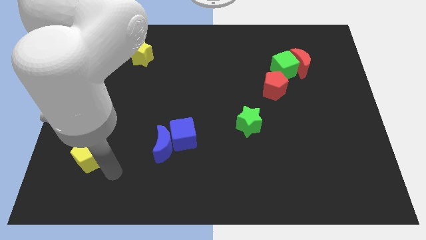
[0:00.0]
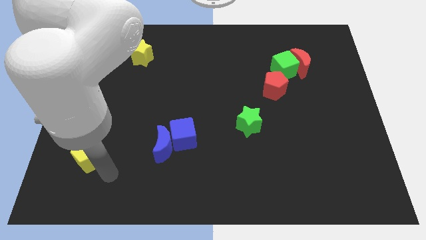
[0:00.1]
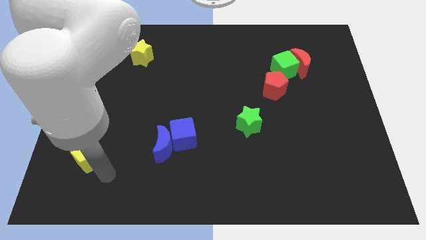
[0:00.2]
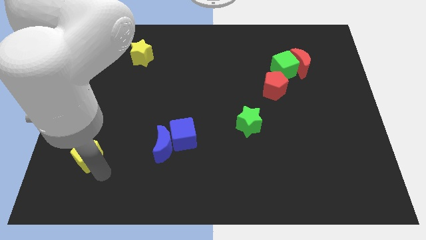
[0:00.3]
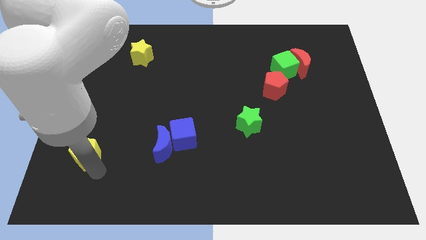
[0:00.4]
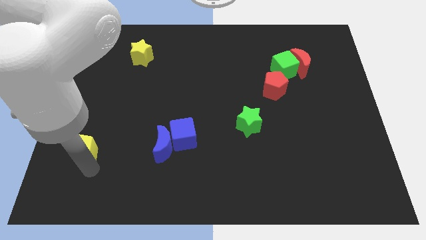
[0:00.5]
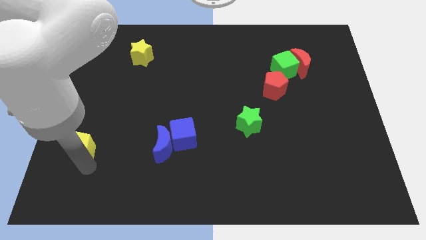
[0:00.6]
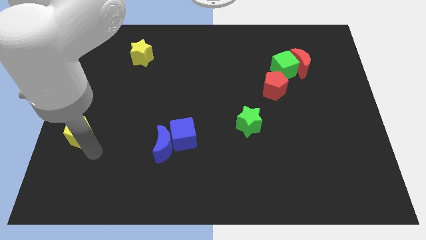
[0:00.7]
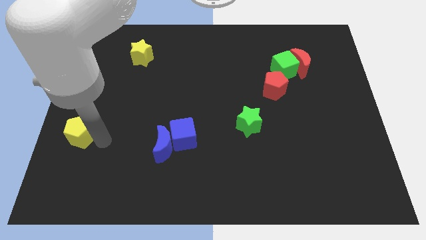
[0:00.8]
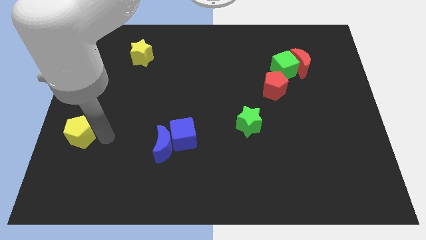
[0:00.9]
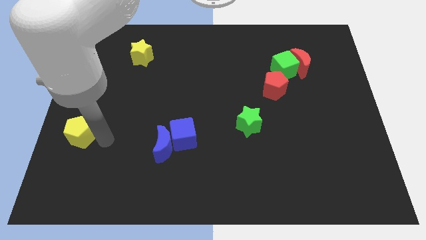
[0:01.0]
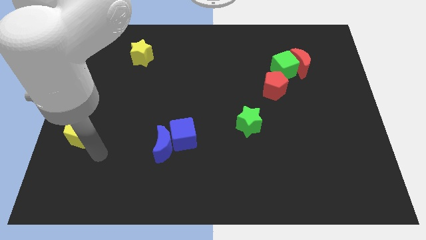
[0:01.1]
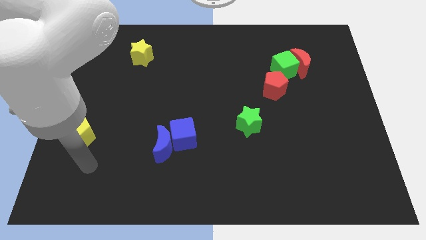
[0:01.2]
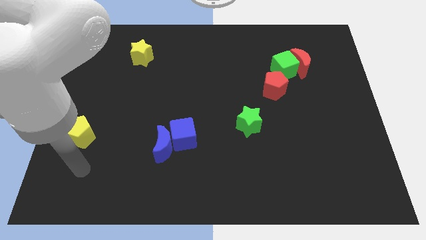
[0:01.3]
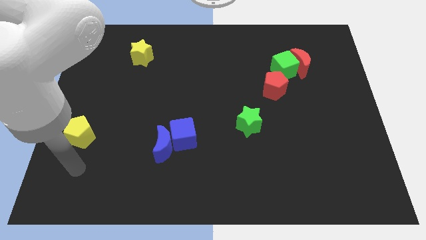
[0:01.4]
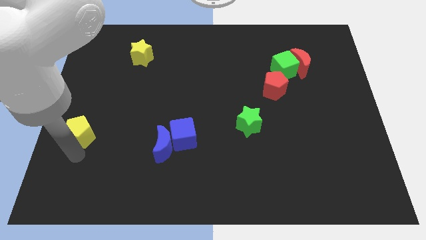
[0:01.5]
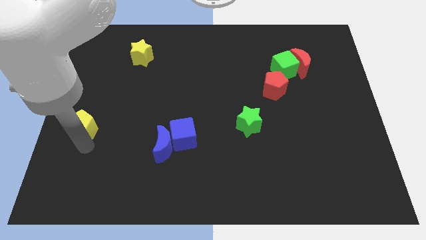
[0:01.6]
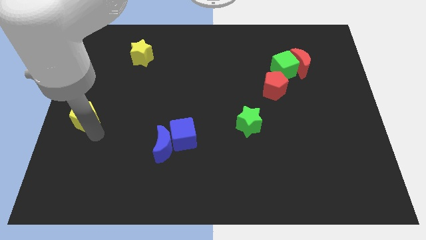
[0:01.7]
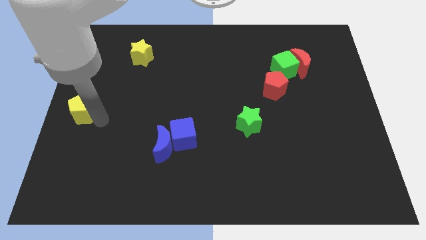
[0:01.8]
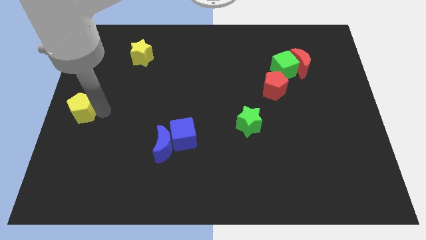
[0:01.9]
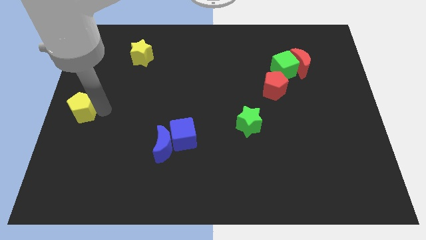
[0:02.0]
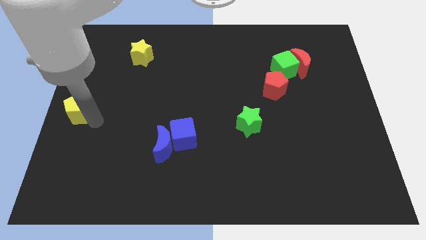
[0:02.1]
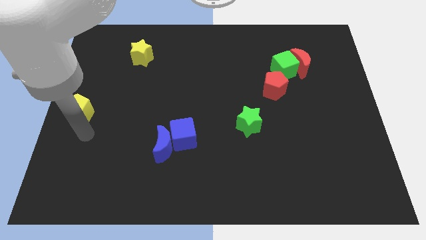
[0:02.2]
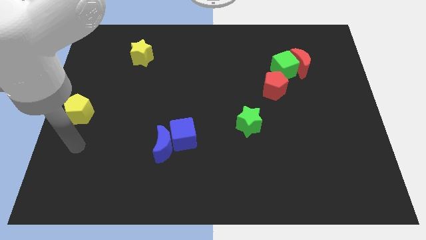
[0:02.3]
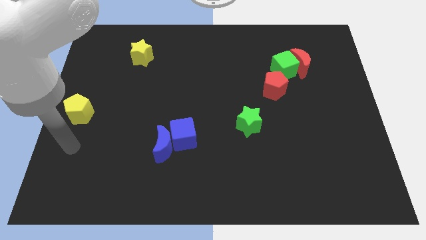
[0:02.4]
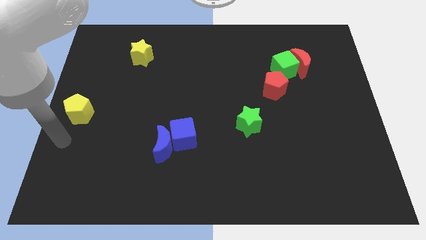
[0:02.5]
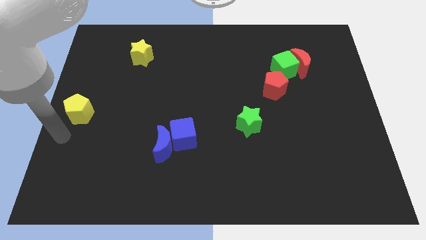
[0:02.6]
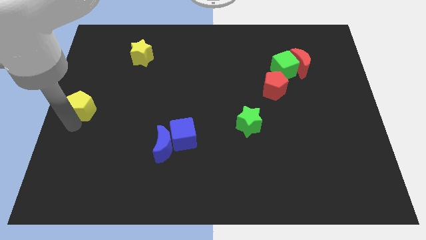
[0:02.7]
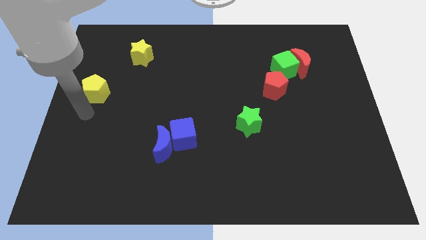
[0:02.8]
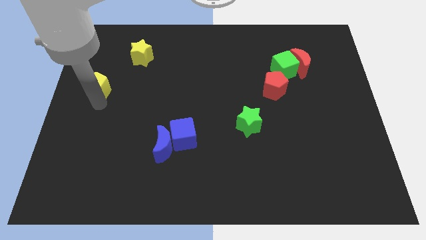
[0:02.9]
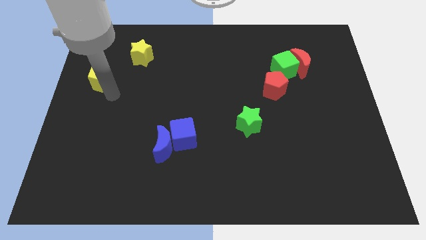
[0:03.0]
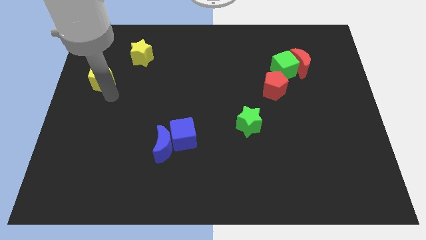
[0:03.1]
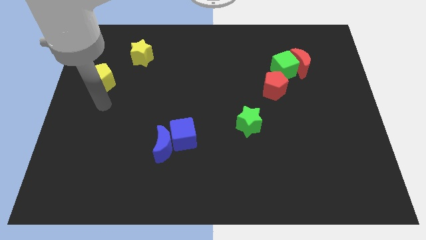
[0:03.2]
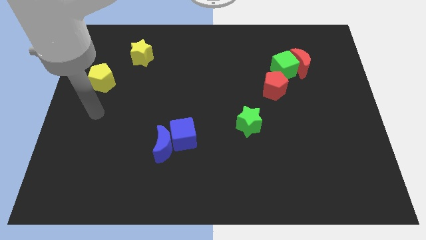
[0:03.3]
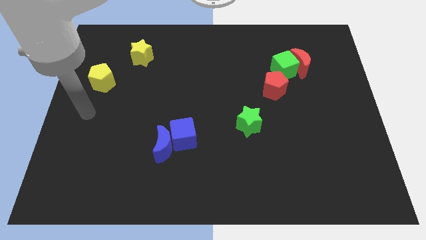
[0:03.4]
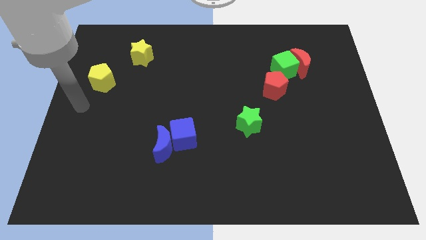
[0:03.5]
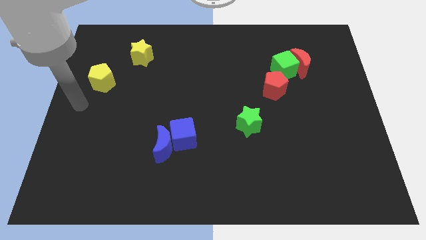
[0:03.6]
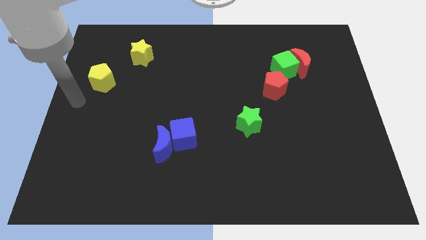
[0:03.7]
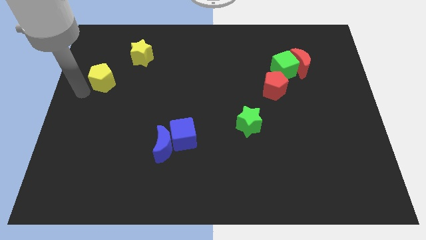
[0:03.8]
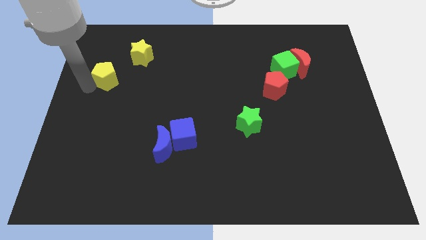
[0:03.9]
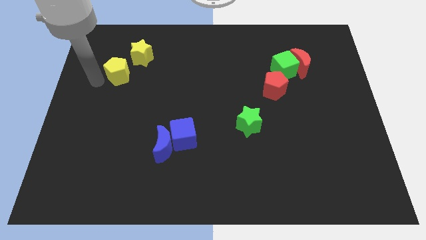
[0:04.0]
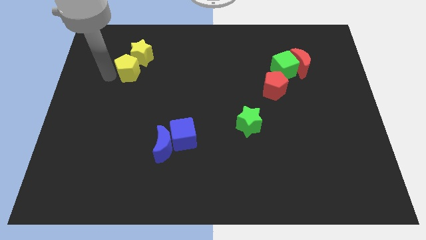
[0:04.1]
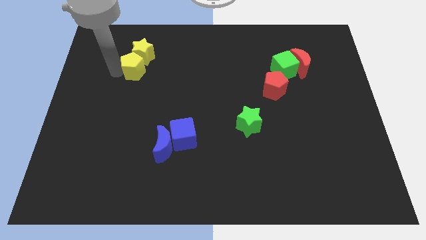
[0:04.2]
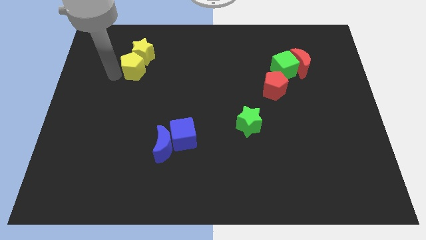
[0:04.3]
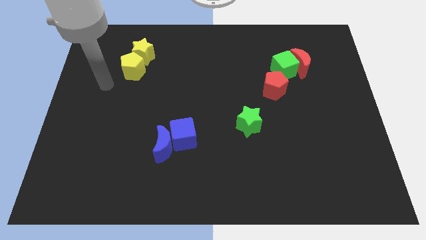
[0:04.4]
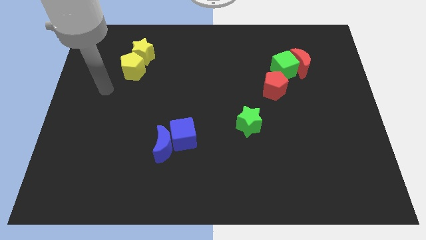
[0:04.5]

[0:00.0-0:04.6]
push the yellow pentagon into the yellow star

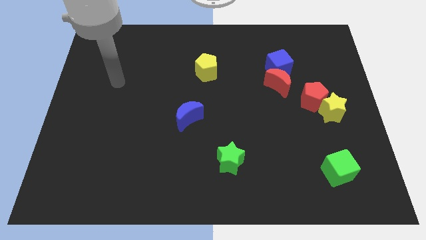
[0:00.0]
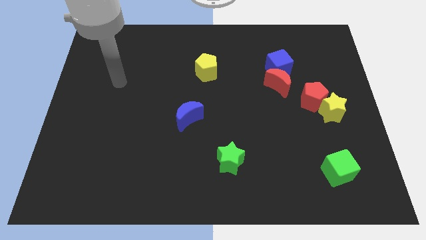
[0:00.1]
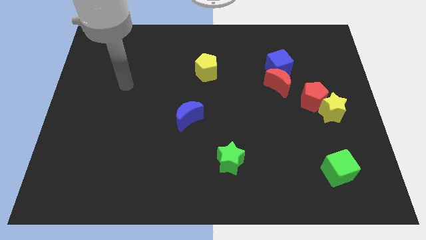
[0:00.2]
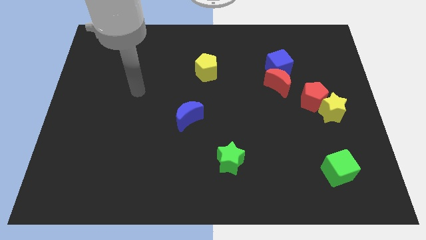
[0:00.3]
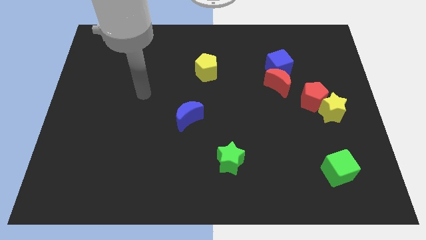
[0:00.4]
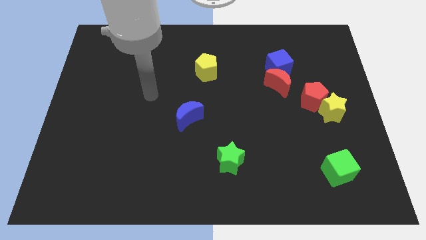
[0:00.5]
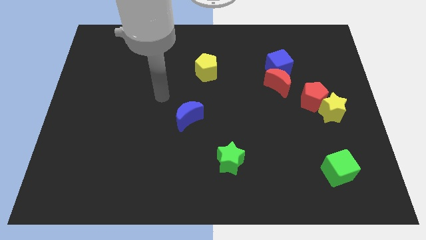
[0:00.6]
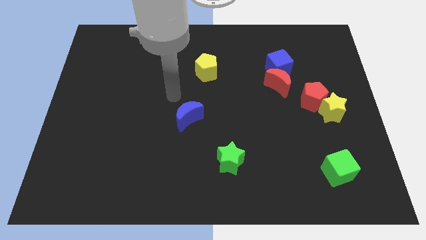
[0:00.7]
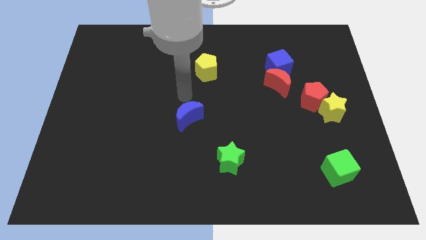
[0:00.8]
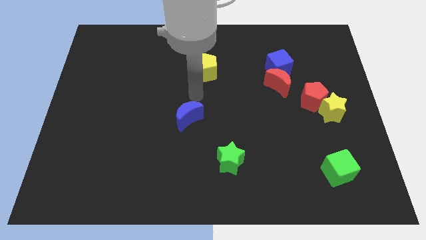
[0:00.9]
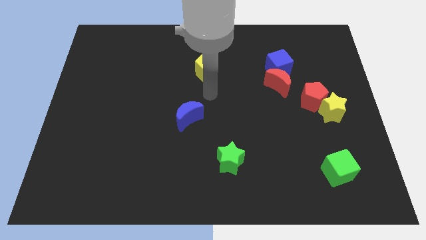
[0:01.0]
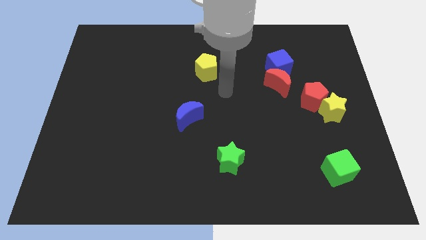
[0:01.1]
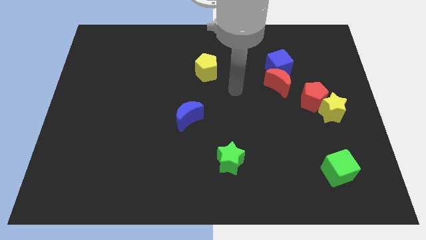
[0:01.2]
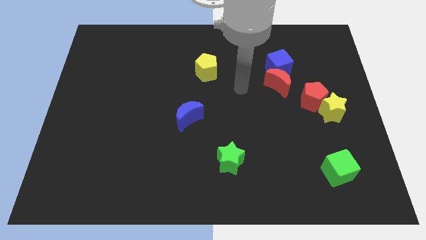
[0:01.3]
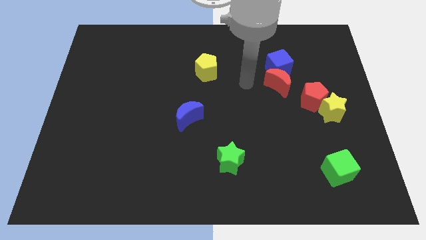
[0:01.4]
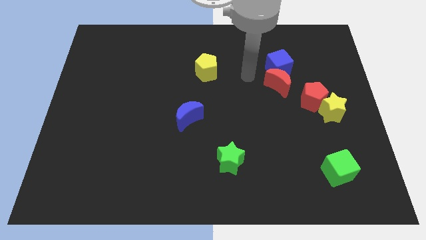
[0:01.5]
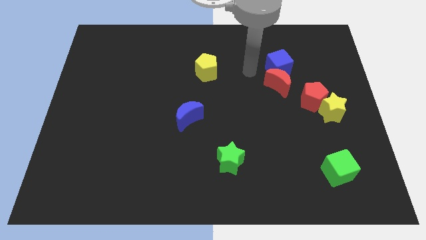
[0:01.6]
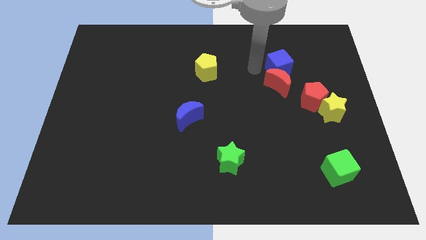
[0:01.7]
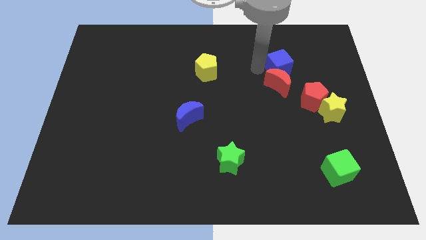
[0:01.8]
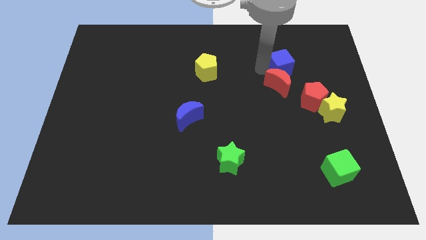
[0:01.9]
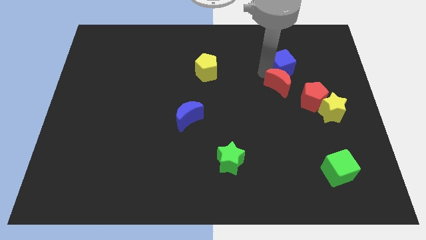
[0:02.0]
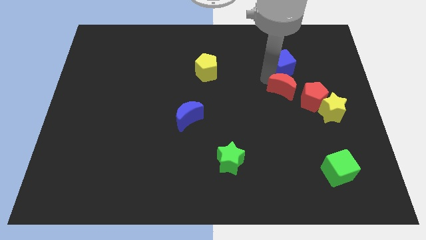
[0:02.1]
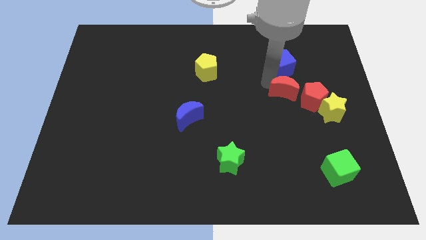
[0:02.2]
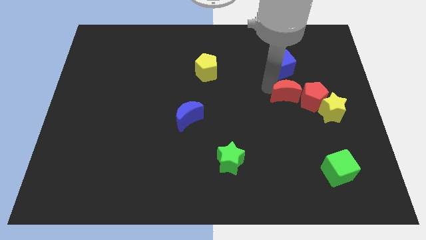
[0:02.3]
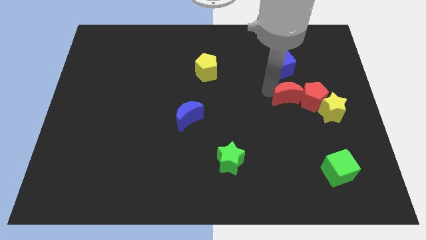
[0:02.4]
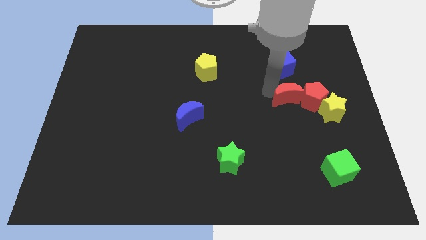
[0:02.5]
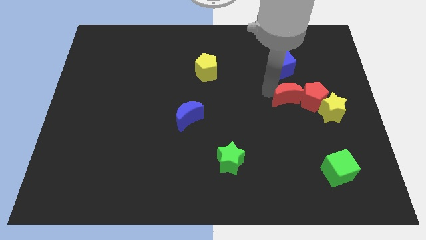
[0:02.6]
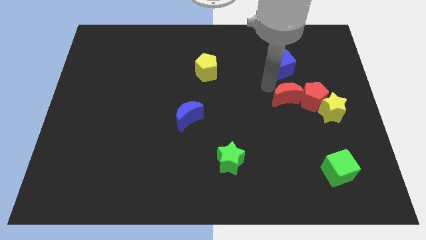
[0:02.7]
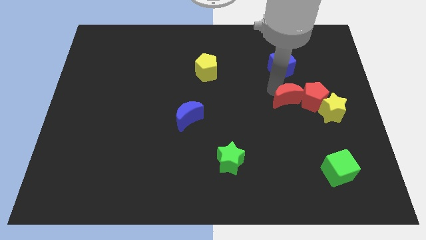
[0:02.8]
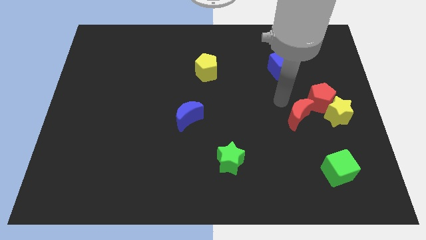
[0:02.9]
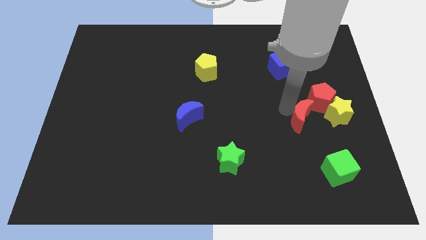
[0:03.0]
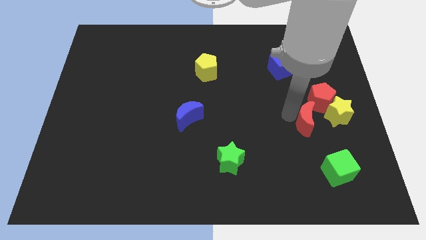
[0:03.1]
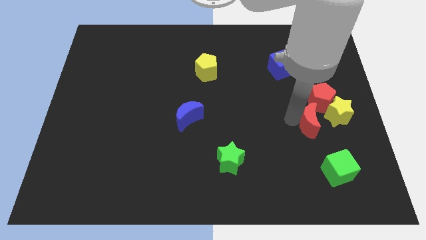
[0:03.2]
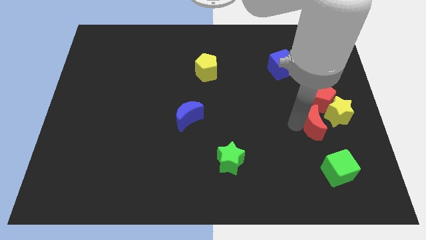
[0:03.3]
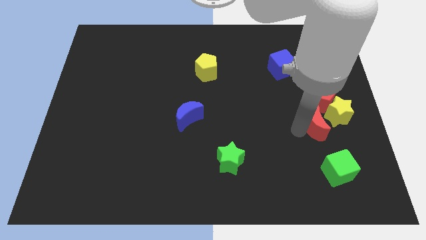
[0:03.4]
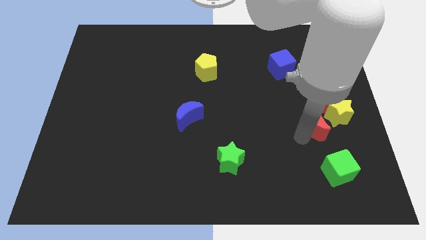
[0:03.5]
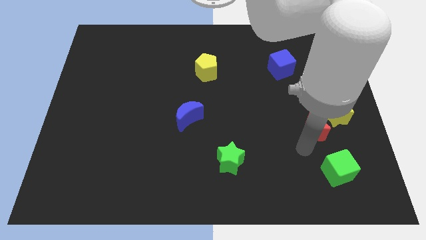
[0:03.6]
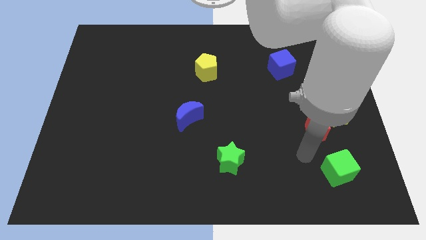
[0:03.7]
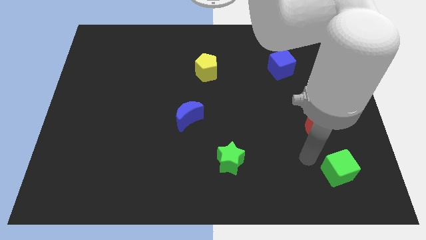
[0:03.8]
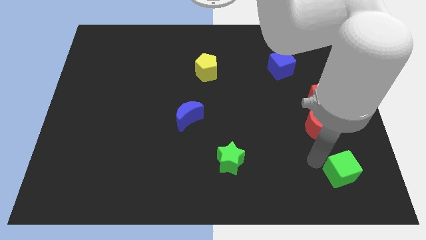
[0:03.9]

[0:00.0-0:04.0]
move away the red crescent from the blue cube

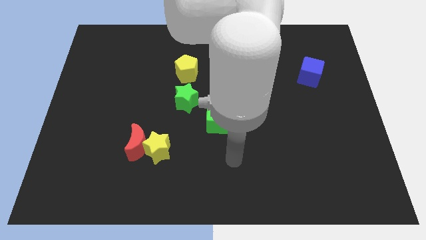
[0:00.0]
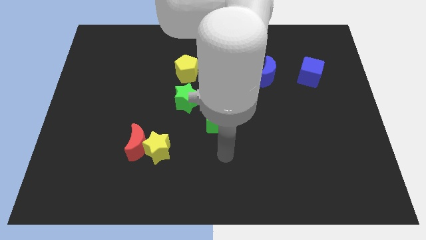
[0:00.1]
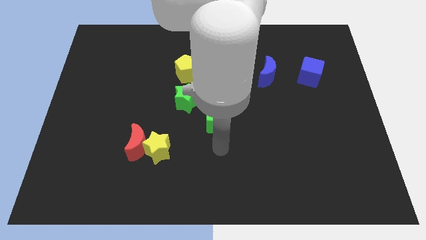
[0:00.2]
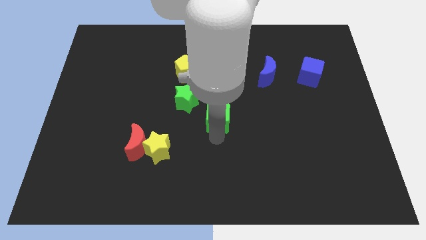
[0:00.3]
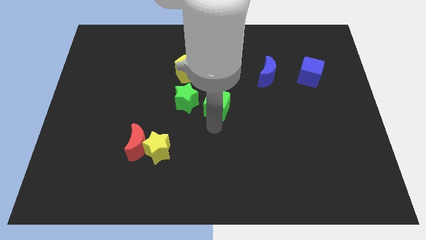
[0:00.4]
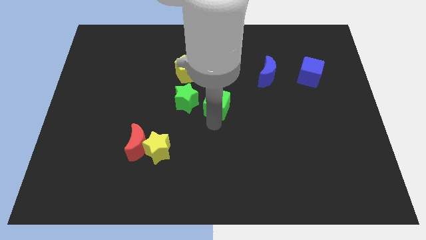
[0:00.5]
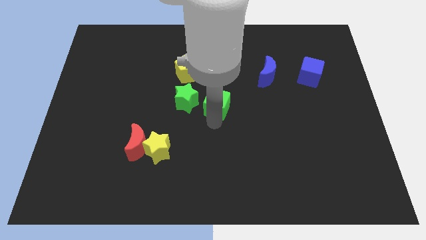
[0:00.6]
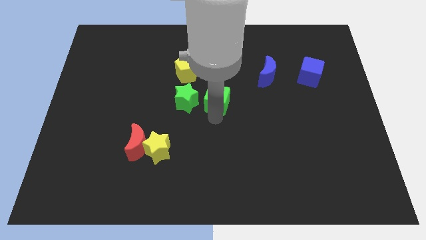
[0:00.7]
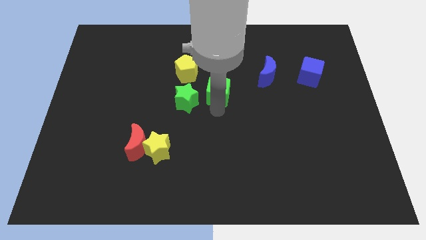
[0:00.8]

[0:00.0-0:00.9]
place green cube to the right of the green star
